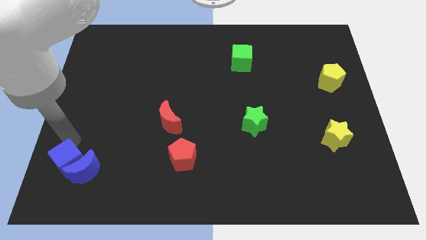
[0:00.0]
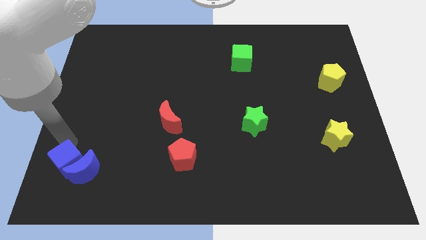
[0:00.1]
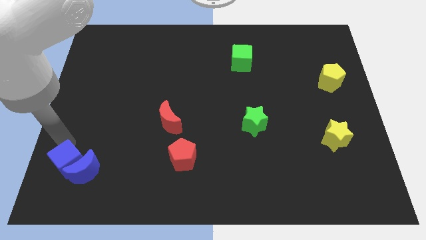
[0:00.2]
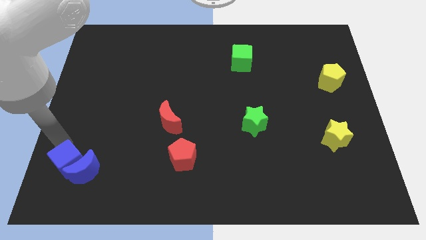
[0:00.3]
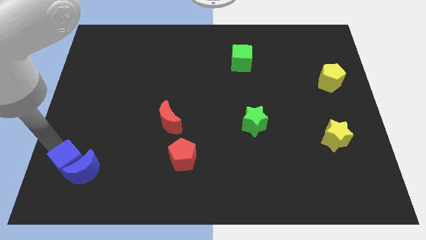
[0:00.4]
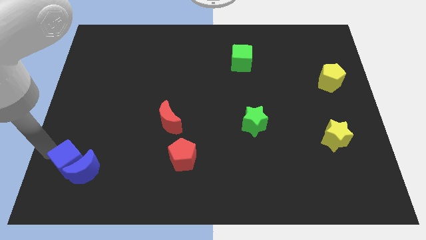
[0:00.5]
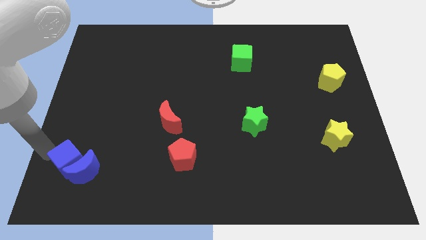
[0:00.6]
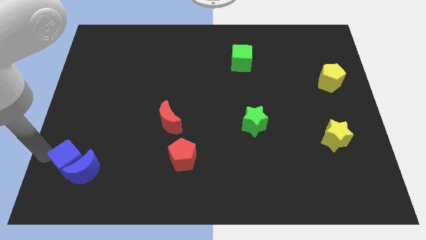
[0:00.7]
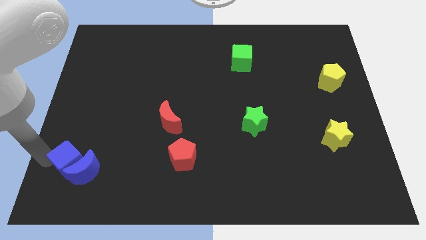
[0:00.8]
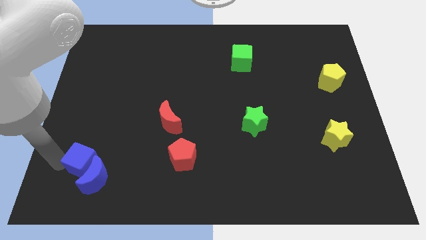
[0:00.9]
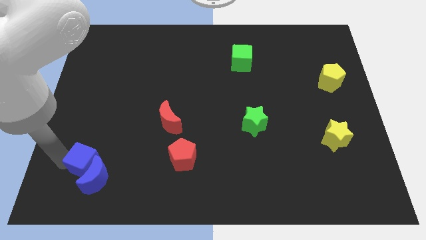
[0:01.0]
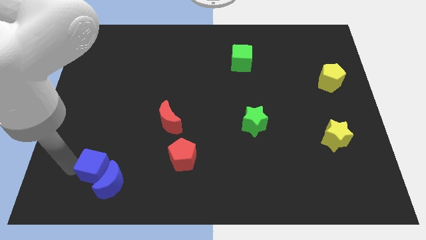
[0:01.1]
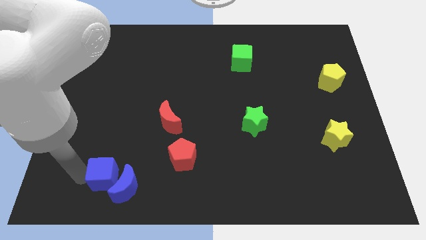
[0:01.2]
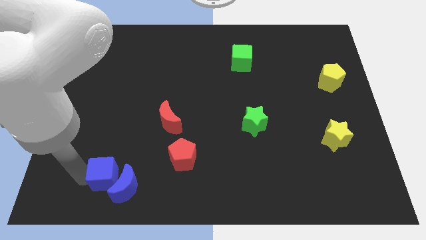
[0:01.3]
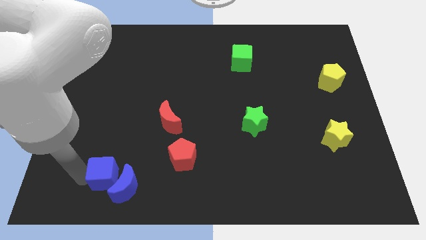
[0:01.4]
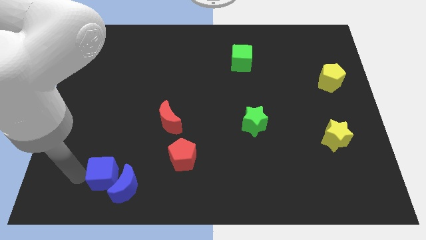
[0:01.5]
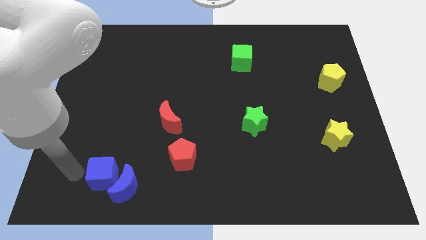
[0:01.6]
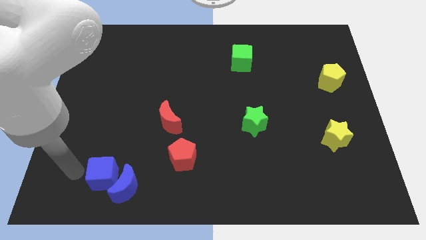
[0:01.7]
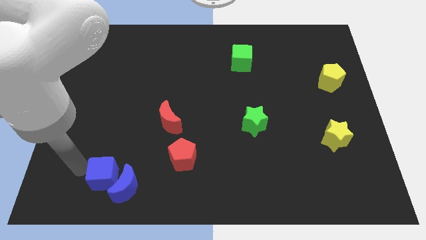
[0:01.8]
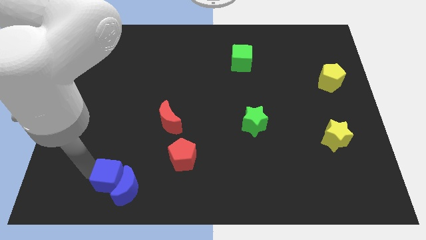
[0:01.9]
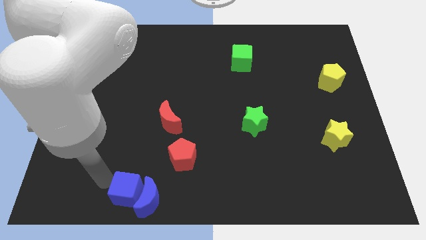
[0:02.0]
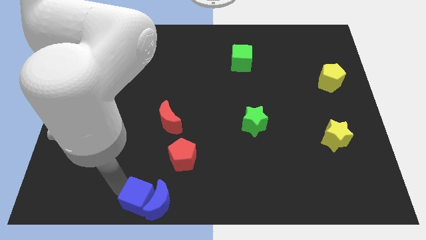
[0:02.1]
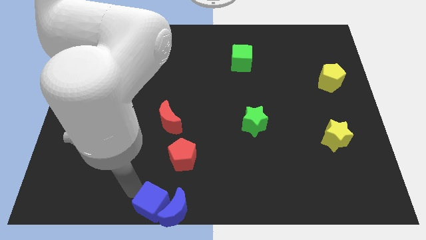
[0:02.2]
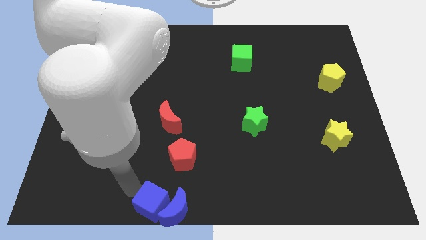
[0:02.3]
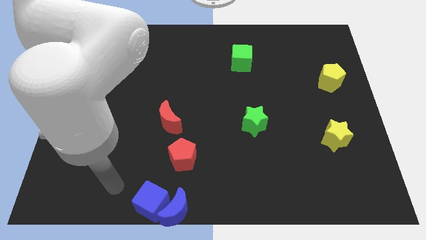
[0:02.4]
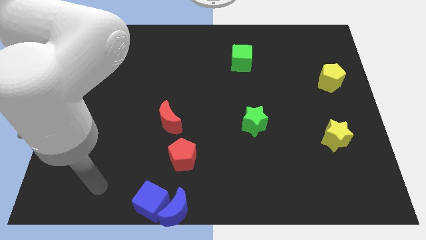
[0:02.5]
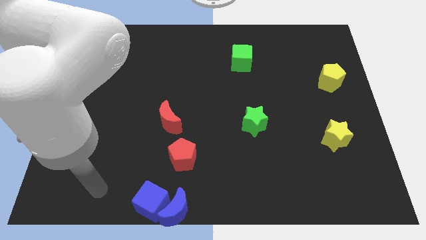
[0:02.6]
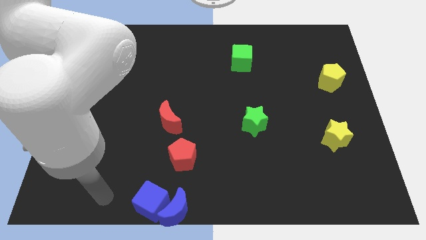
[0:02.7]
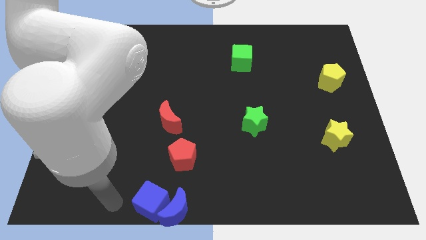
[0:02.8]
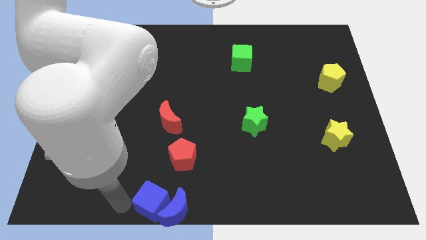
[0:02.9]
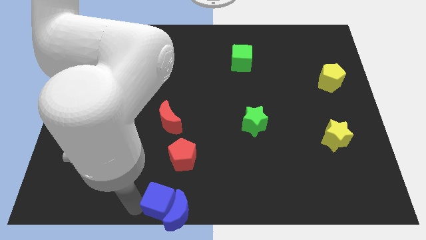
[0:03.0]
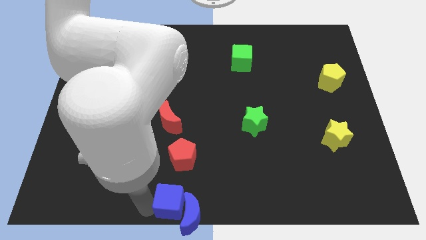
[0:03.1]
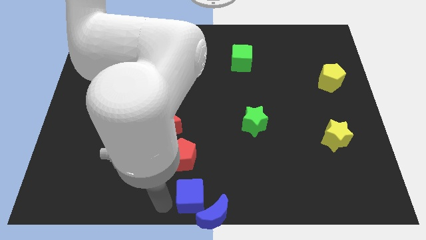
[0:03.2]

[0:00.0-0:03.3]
push the blue blocks to the bottom center

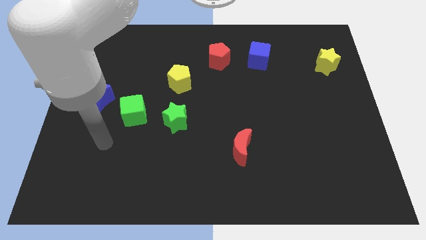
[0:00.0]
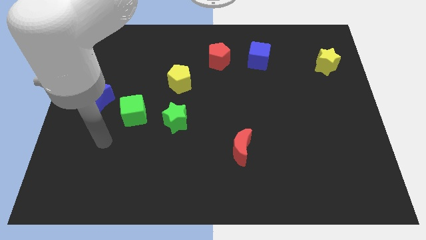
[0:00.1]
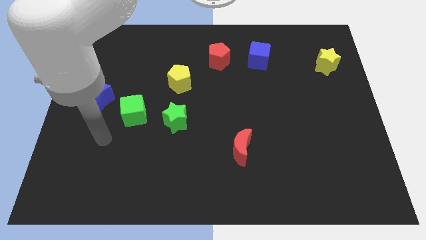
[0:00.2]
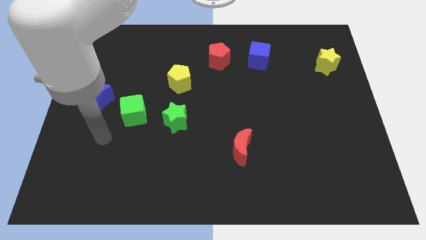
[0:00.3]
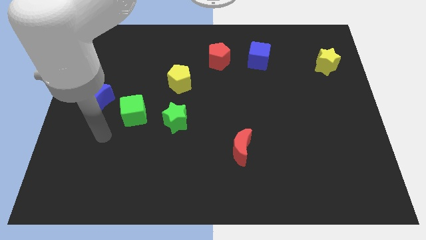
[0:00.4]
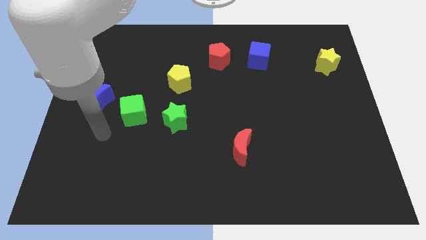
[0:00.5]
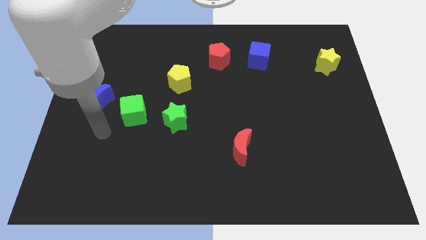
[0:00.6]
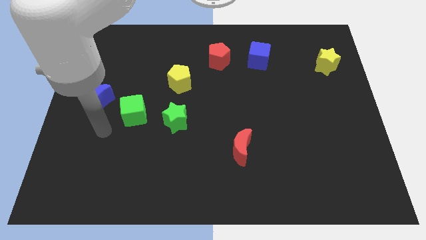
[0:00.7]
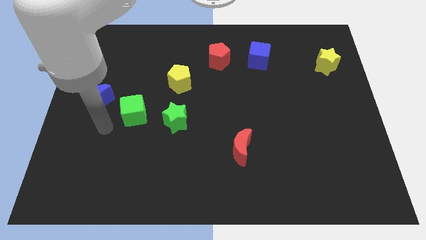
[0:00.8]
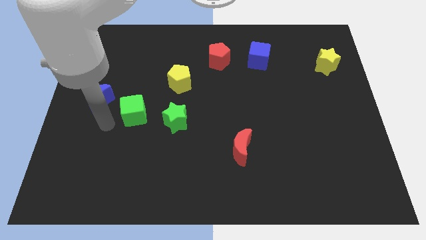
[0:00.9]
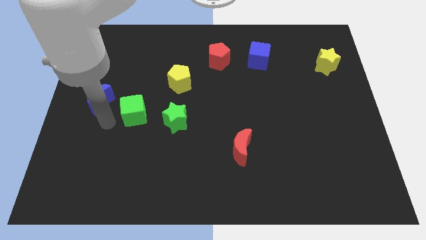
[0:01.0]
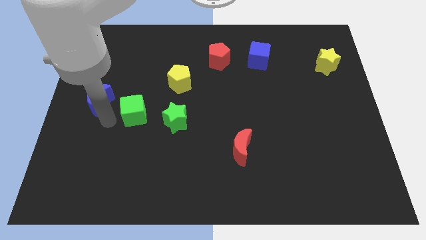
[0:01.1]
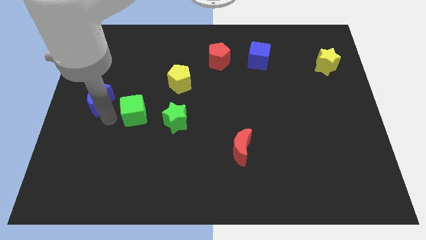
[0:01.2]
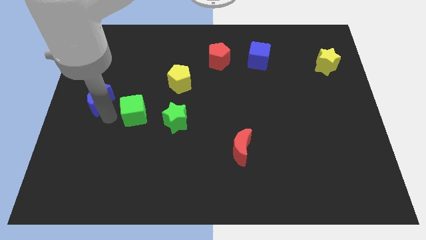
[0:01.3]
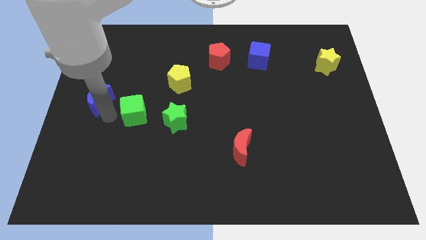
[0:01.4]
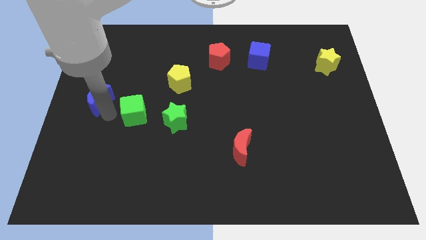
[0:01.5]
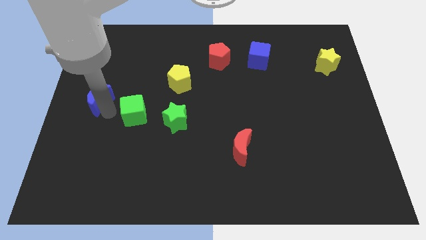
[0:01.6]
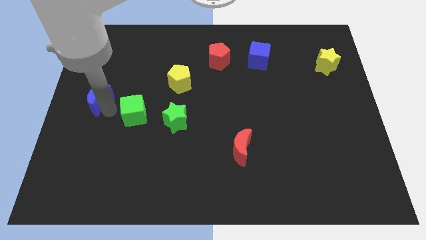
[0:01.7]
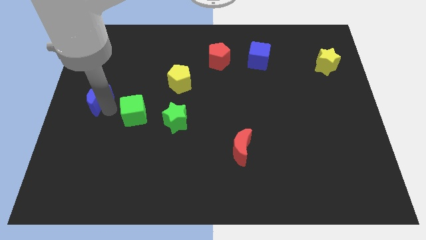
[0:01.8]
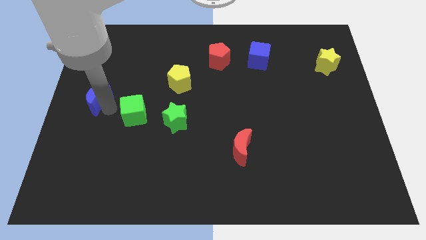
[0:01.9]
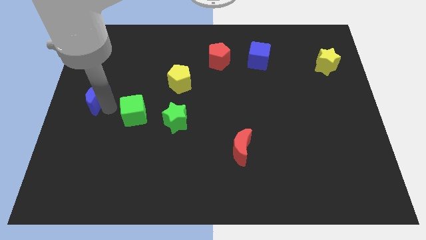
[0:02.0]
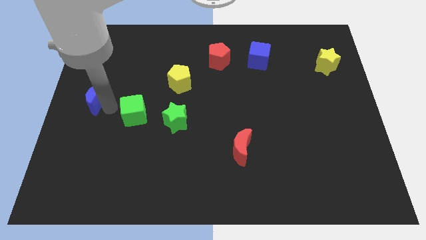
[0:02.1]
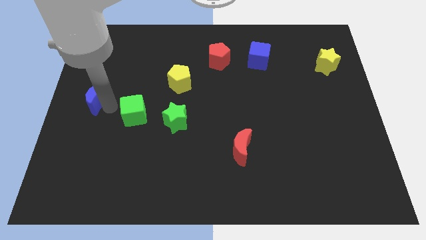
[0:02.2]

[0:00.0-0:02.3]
put your arm in between the green star and blue crescent

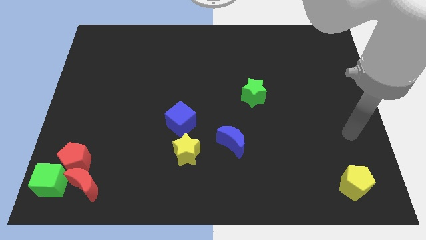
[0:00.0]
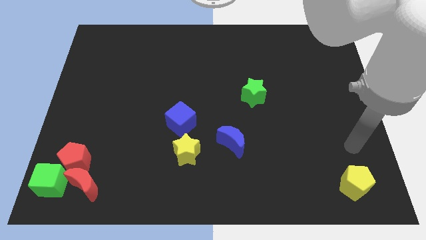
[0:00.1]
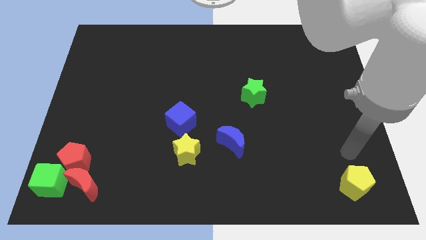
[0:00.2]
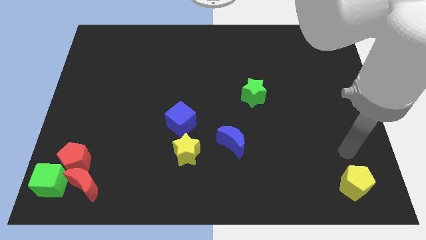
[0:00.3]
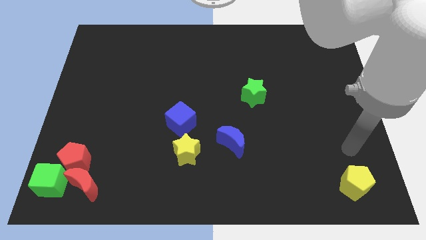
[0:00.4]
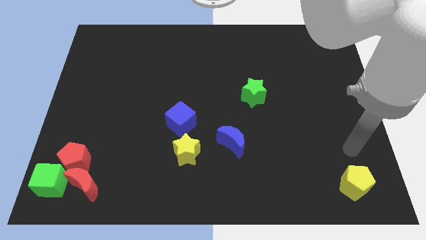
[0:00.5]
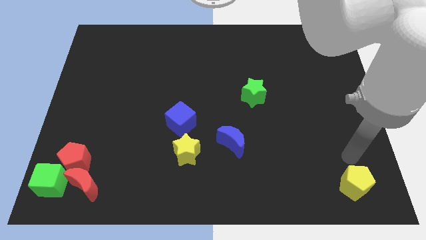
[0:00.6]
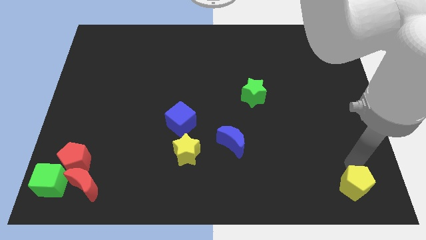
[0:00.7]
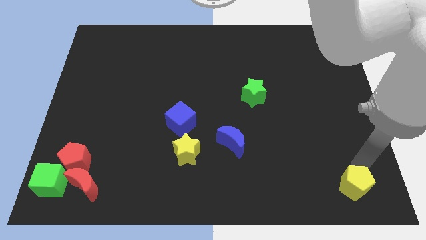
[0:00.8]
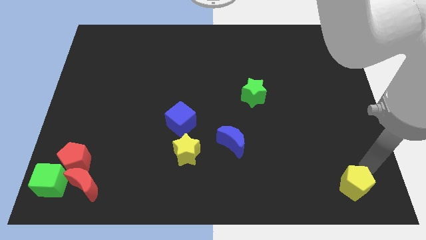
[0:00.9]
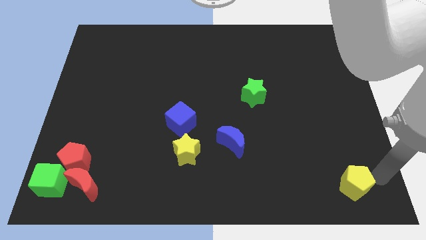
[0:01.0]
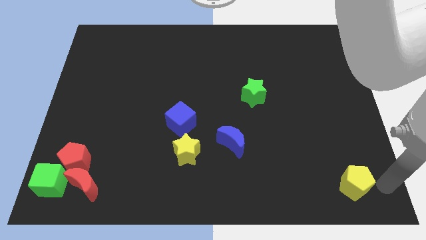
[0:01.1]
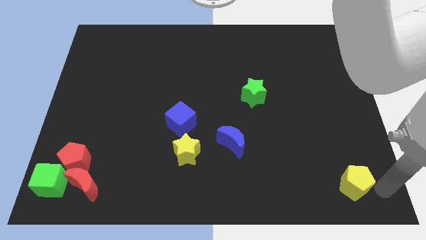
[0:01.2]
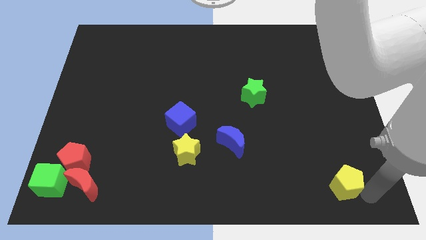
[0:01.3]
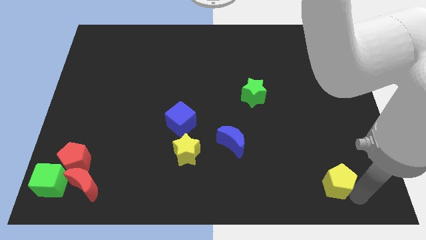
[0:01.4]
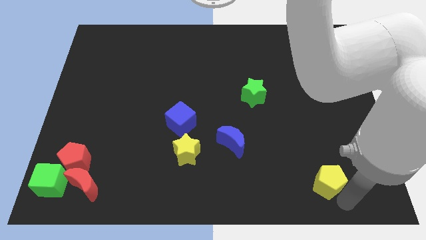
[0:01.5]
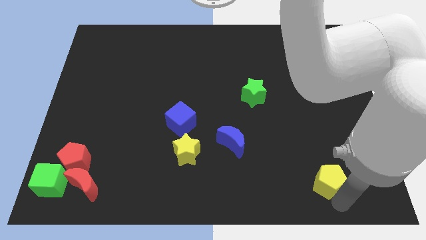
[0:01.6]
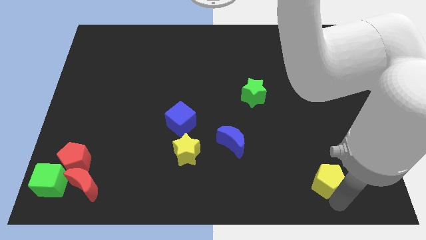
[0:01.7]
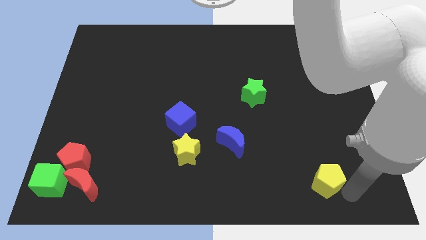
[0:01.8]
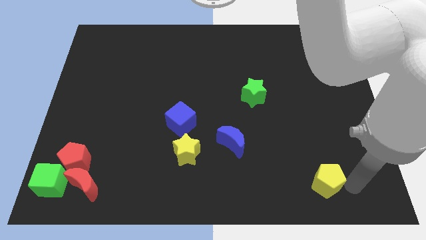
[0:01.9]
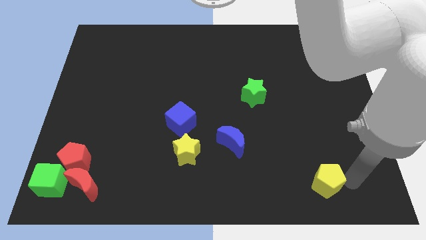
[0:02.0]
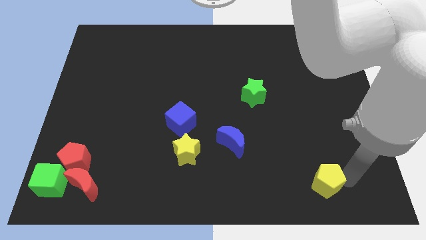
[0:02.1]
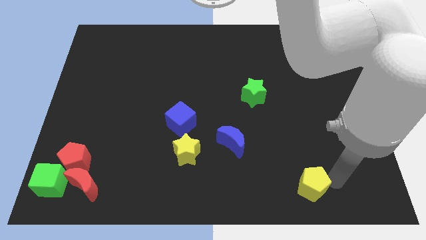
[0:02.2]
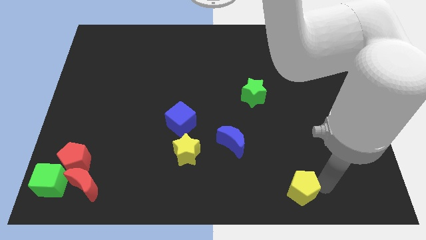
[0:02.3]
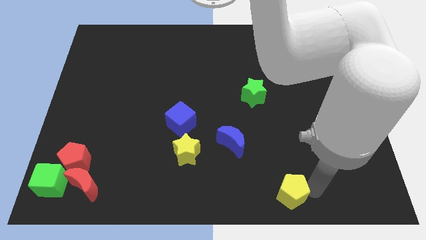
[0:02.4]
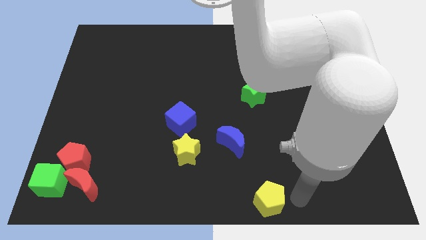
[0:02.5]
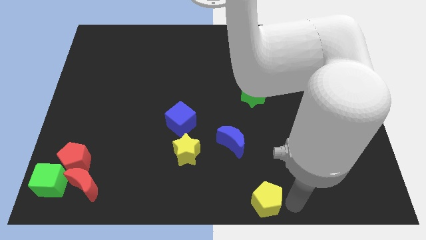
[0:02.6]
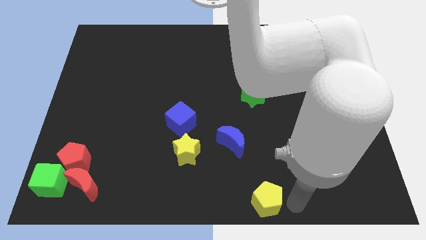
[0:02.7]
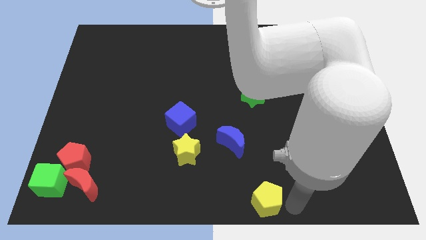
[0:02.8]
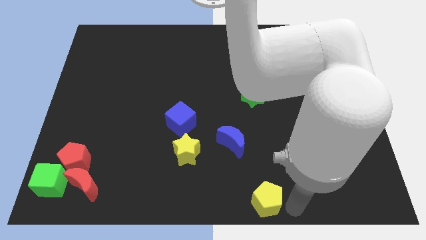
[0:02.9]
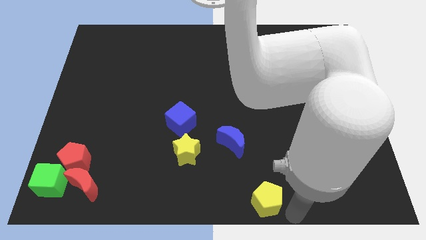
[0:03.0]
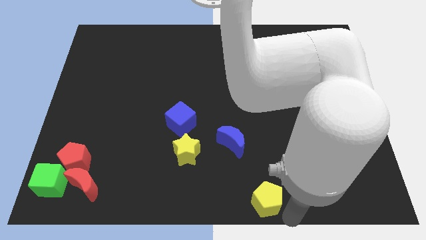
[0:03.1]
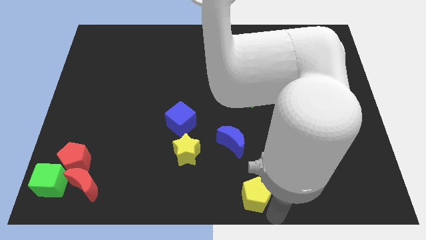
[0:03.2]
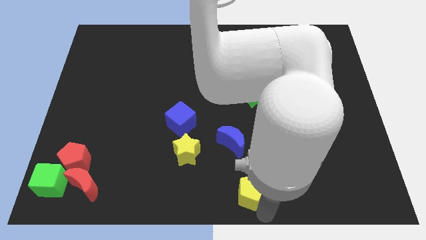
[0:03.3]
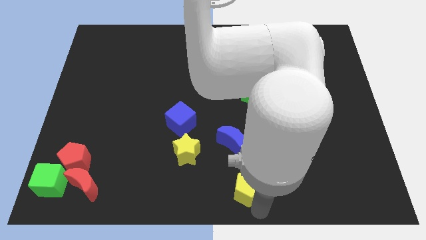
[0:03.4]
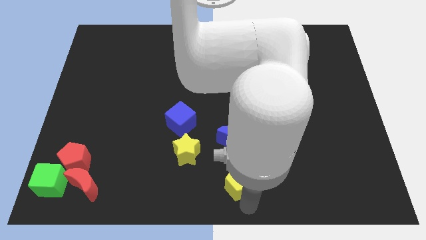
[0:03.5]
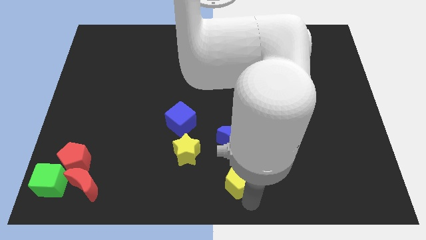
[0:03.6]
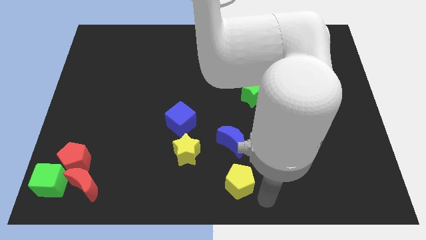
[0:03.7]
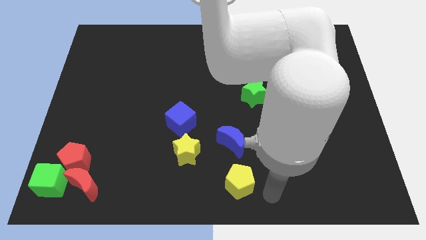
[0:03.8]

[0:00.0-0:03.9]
slide the yellow pentagon to the bottom center of the board
